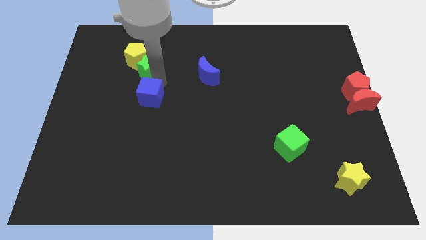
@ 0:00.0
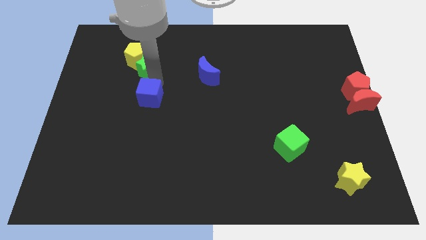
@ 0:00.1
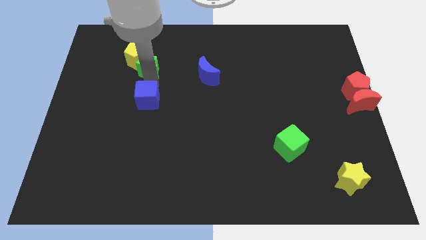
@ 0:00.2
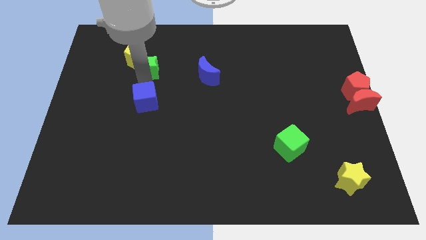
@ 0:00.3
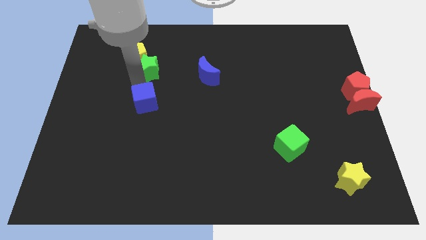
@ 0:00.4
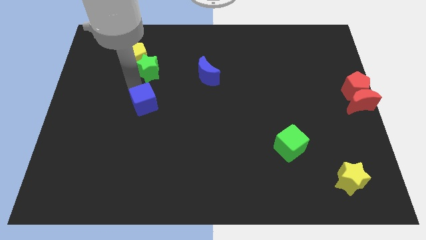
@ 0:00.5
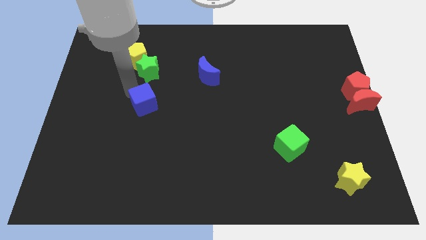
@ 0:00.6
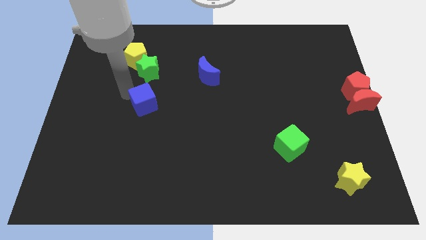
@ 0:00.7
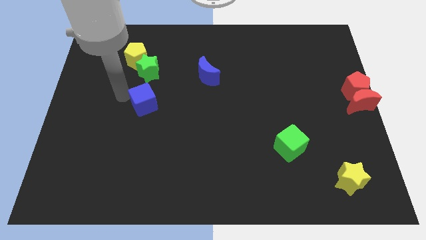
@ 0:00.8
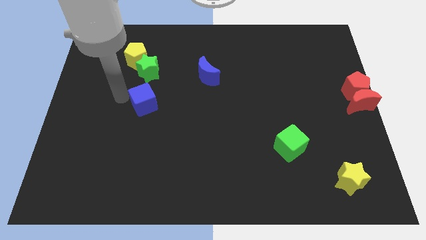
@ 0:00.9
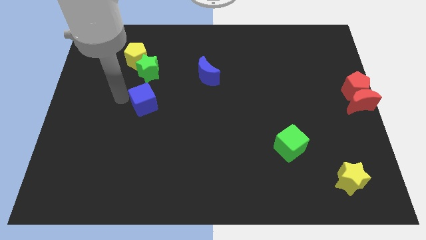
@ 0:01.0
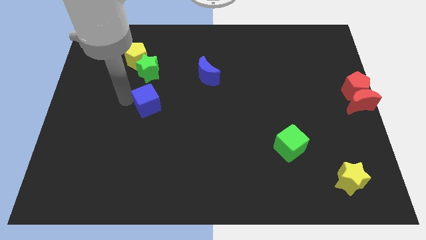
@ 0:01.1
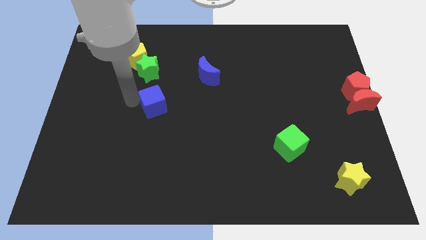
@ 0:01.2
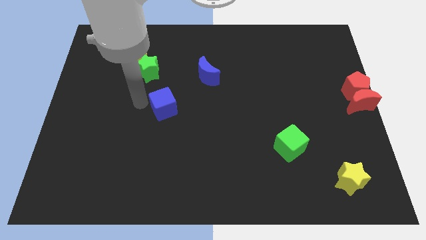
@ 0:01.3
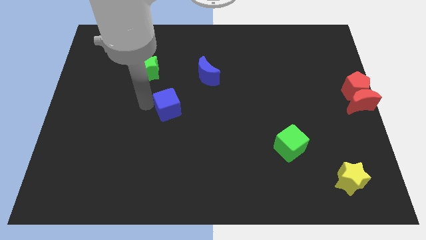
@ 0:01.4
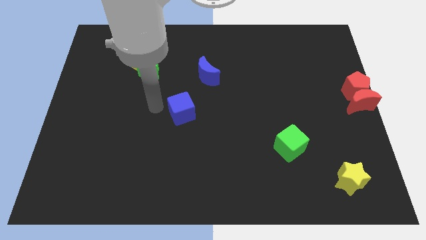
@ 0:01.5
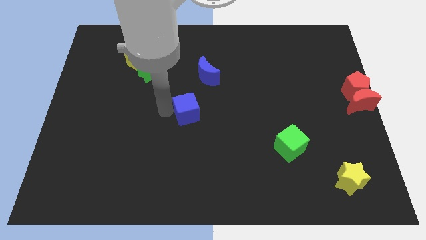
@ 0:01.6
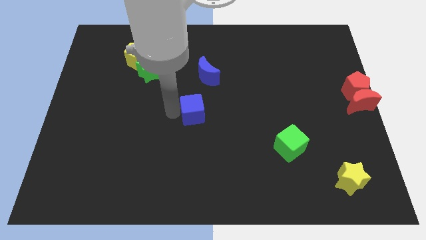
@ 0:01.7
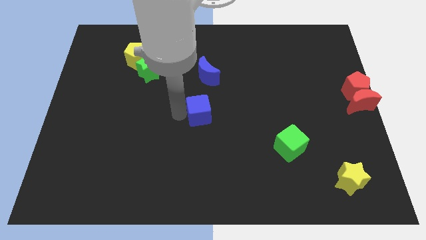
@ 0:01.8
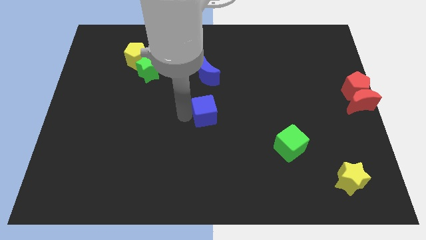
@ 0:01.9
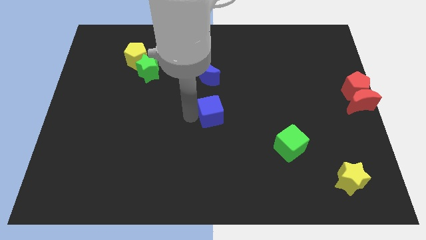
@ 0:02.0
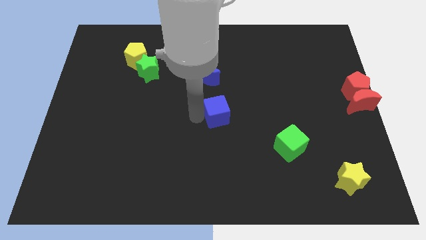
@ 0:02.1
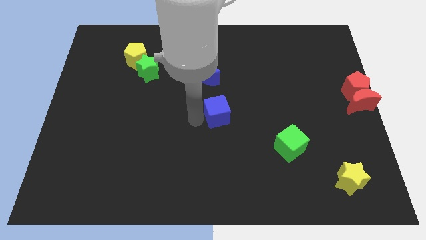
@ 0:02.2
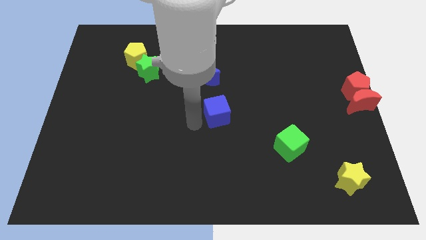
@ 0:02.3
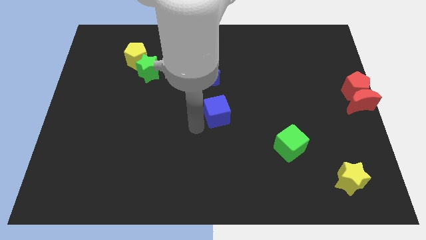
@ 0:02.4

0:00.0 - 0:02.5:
push the blue cube at the bottom side of the blue crescent

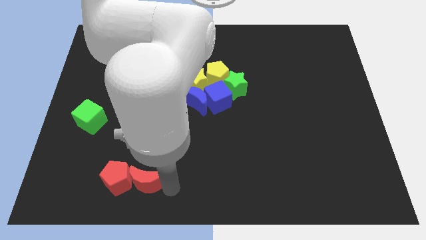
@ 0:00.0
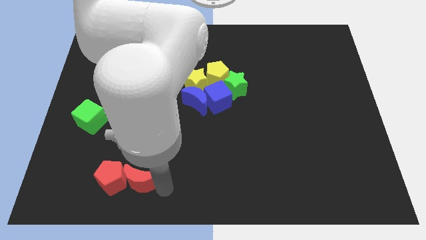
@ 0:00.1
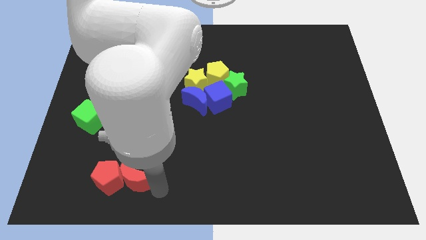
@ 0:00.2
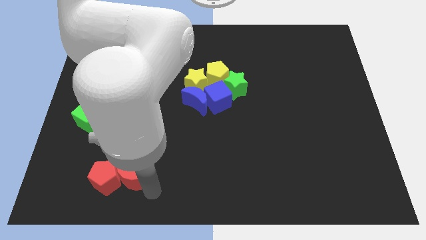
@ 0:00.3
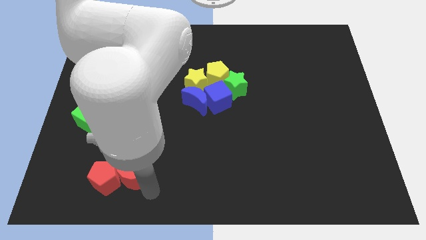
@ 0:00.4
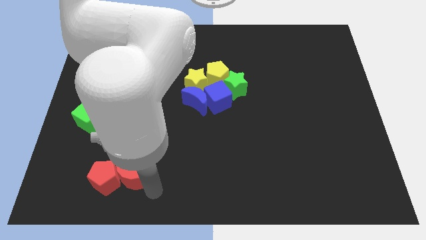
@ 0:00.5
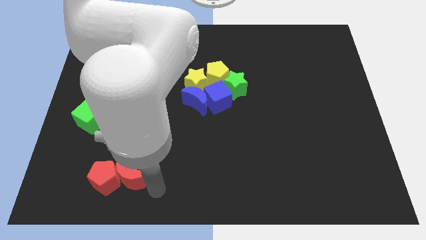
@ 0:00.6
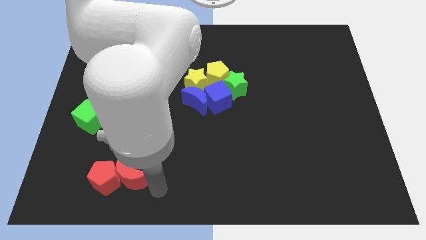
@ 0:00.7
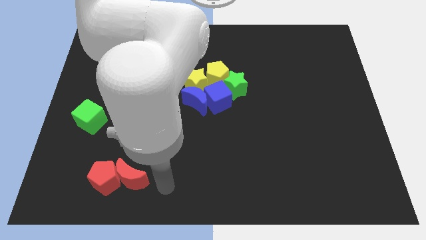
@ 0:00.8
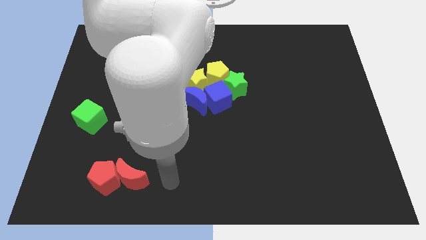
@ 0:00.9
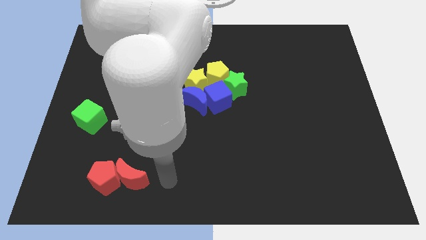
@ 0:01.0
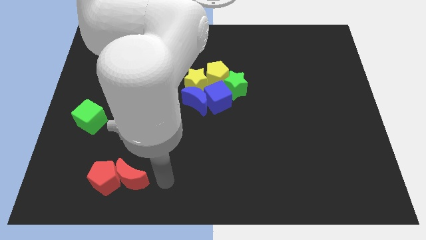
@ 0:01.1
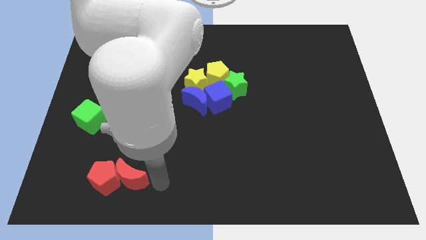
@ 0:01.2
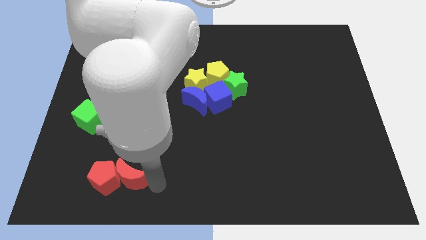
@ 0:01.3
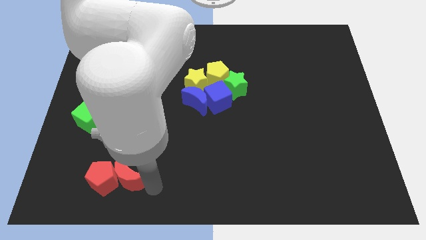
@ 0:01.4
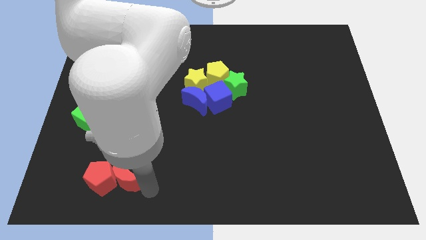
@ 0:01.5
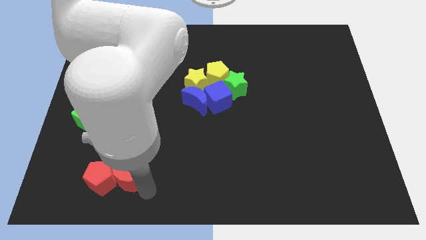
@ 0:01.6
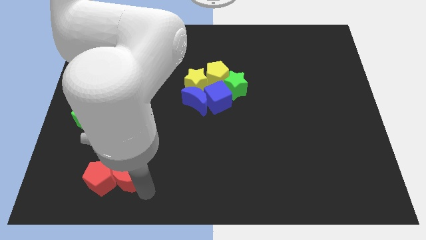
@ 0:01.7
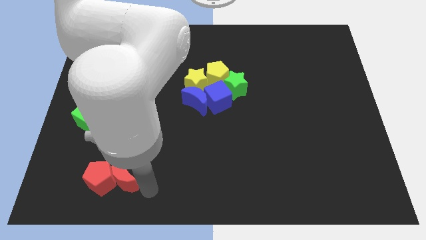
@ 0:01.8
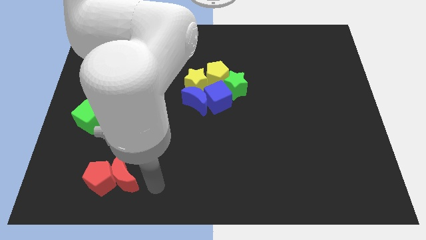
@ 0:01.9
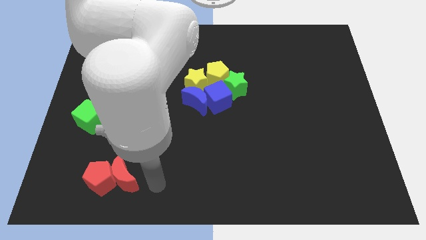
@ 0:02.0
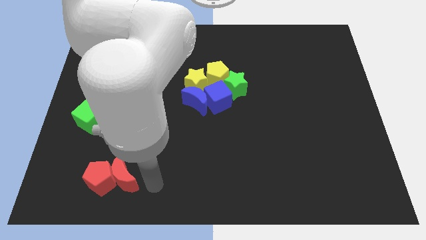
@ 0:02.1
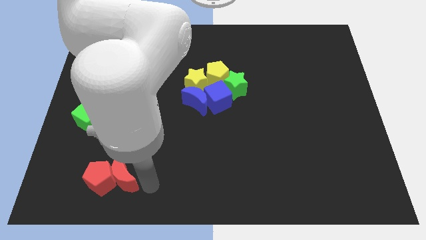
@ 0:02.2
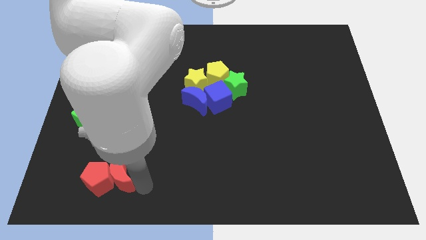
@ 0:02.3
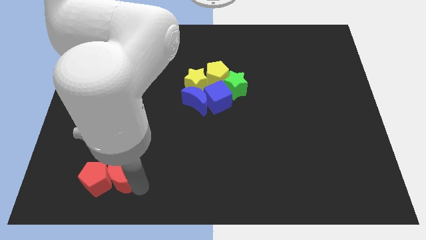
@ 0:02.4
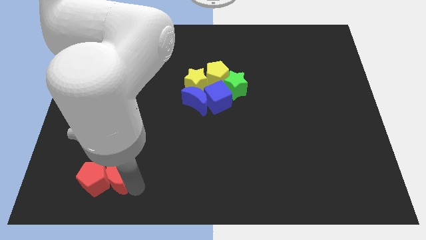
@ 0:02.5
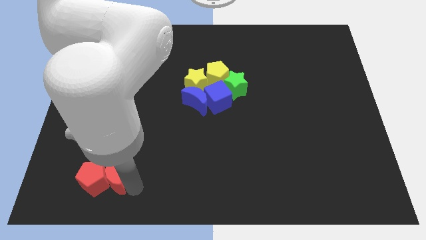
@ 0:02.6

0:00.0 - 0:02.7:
move the red blocks slightly left

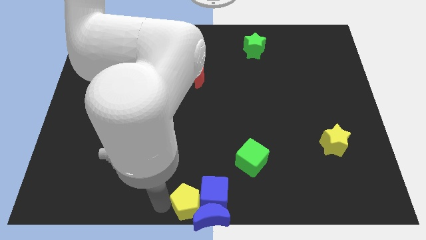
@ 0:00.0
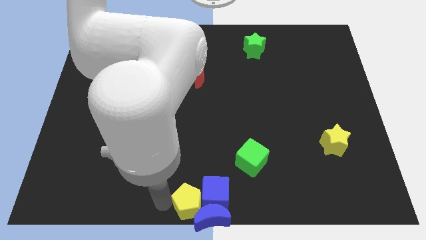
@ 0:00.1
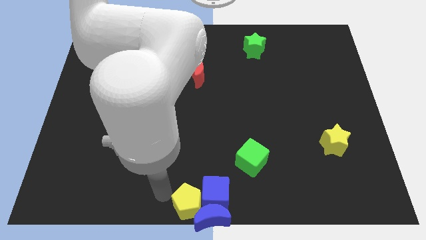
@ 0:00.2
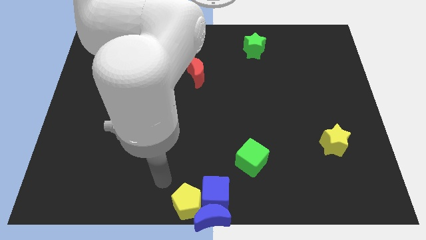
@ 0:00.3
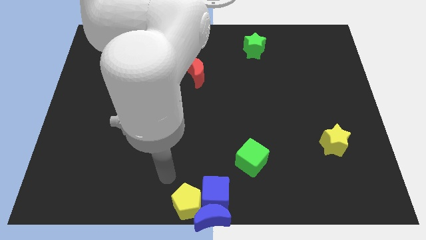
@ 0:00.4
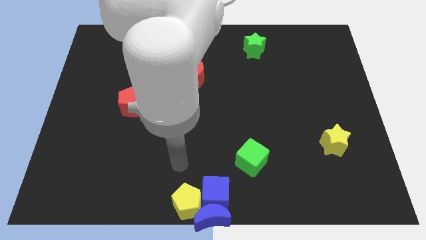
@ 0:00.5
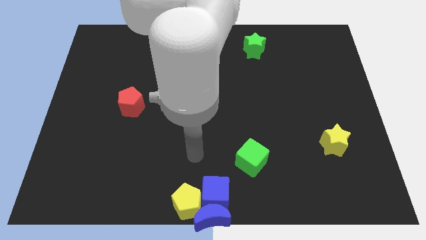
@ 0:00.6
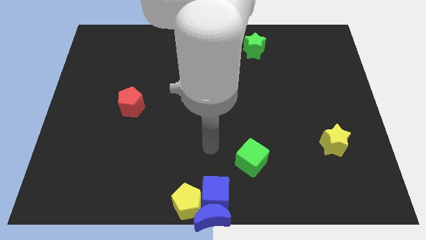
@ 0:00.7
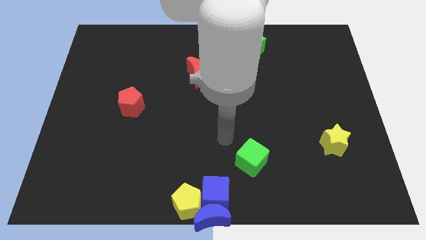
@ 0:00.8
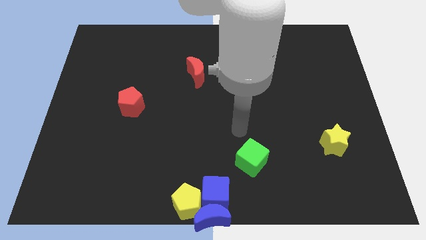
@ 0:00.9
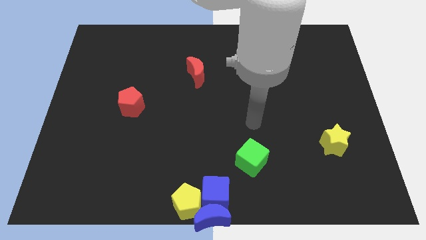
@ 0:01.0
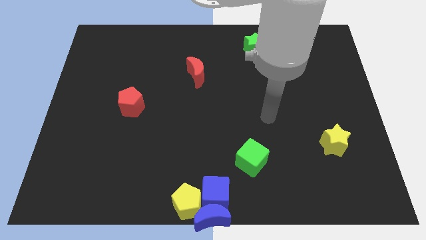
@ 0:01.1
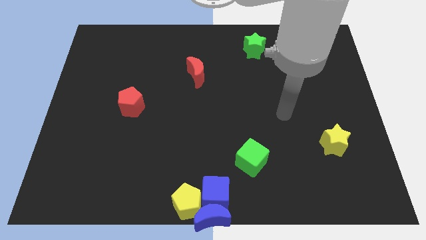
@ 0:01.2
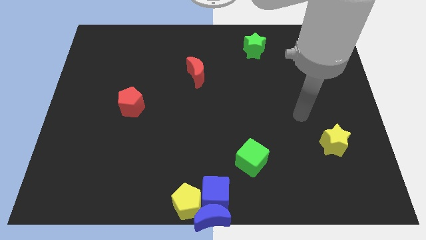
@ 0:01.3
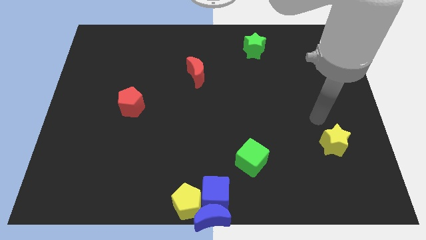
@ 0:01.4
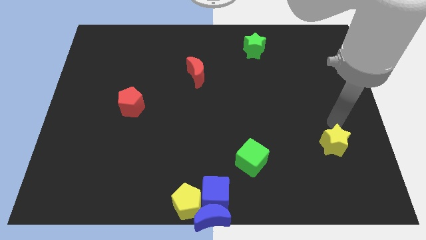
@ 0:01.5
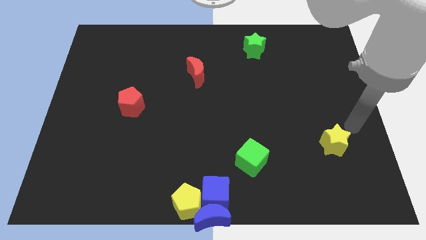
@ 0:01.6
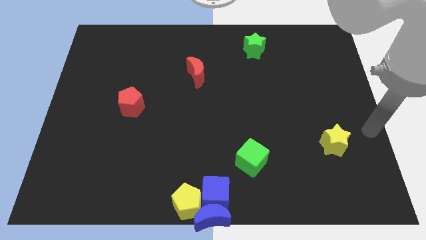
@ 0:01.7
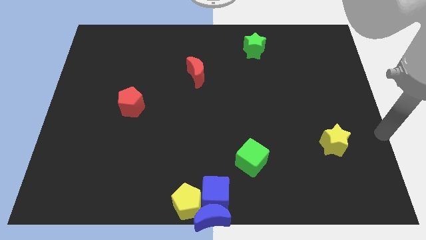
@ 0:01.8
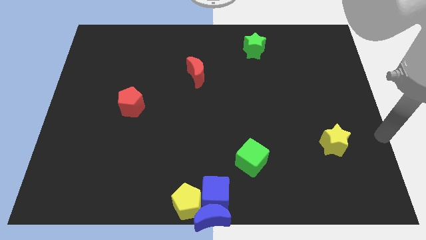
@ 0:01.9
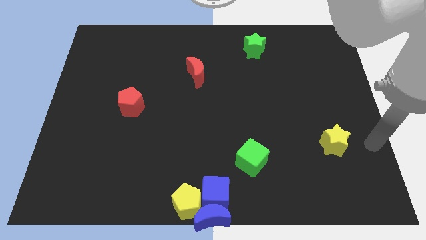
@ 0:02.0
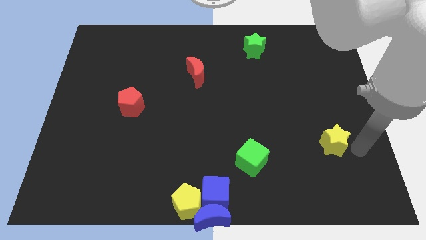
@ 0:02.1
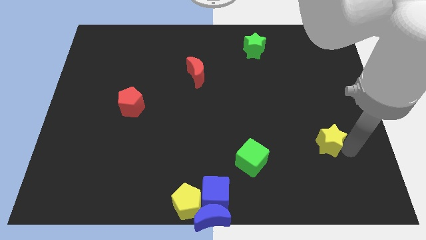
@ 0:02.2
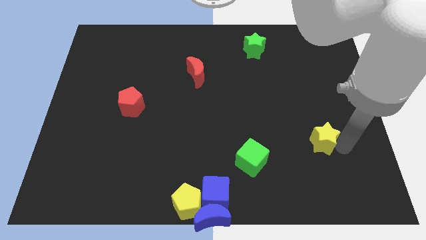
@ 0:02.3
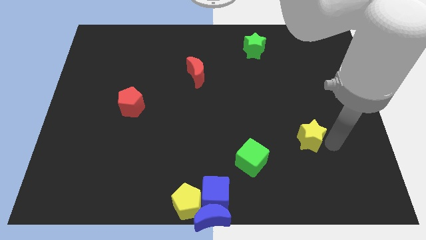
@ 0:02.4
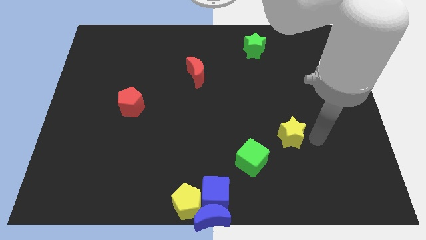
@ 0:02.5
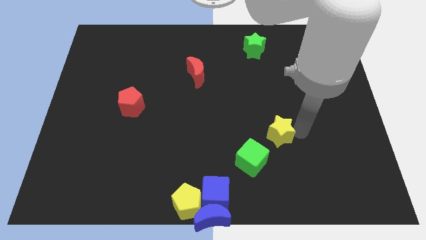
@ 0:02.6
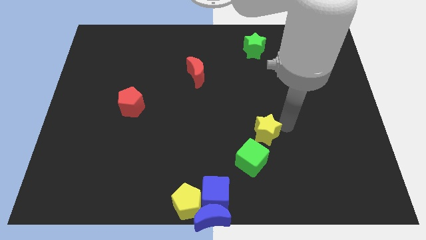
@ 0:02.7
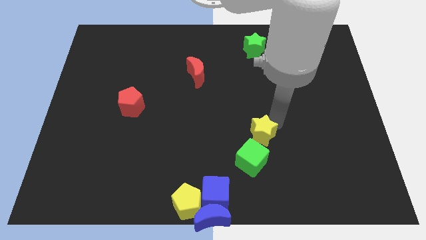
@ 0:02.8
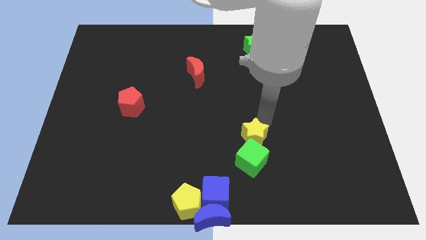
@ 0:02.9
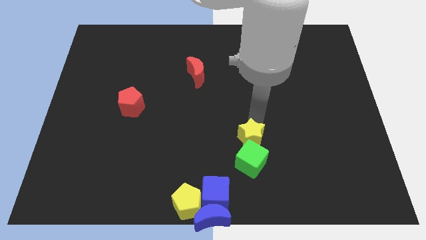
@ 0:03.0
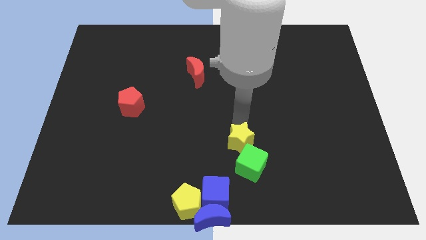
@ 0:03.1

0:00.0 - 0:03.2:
drag the yellow star to the top of the green cube

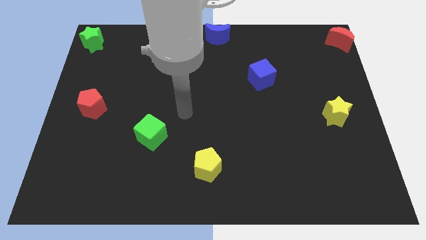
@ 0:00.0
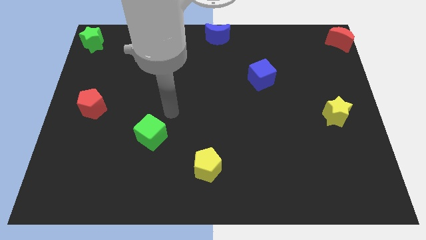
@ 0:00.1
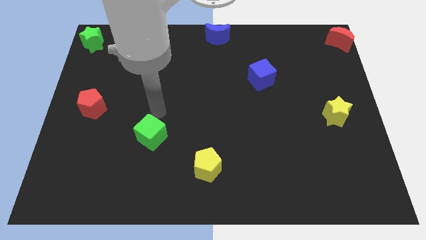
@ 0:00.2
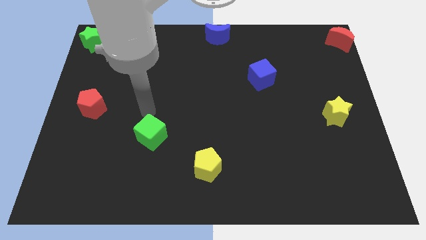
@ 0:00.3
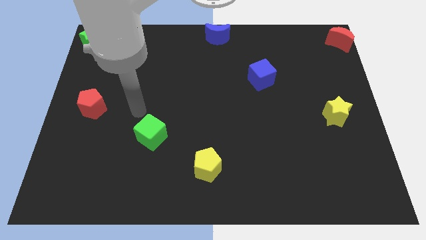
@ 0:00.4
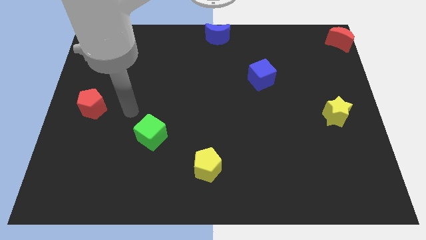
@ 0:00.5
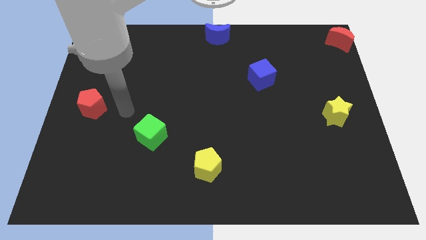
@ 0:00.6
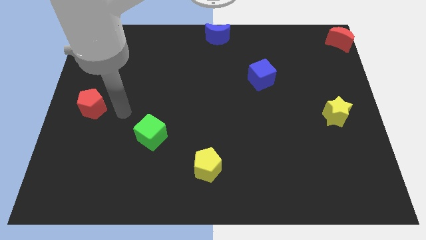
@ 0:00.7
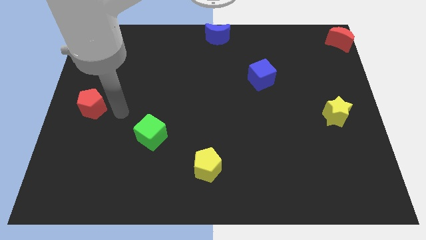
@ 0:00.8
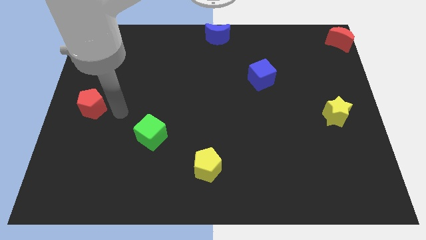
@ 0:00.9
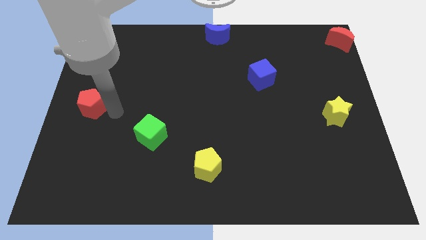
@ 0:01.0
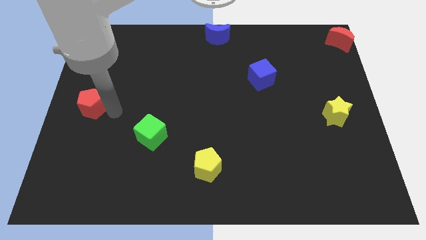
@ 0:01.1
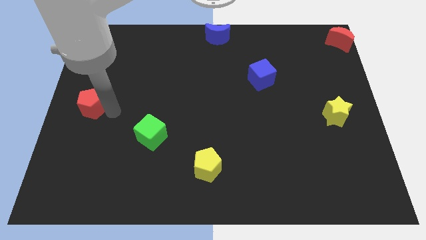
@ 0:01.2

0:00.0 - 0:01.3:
point the arm right to the red pentagon
